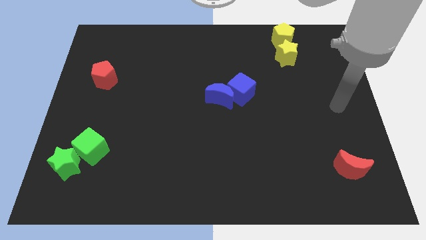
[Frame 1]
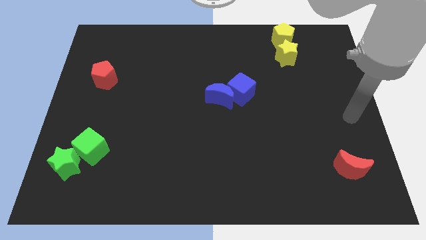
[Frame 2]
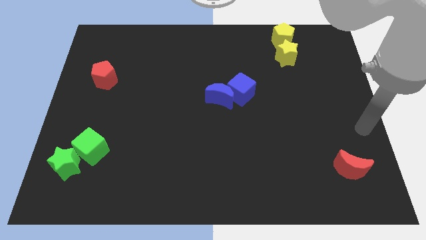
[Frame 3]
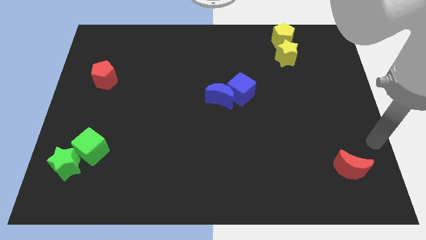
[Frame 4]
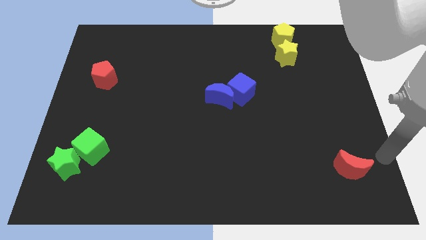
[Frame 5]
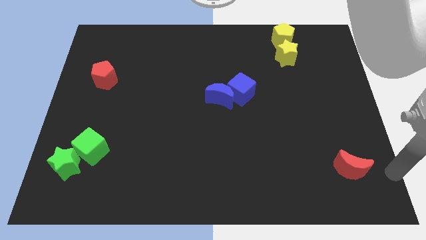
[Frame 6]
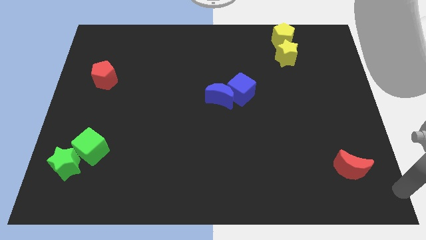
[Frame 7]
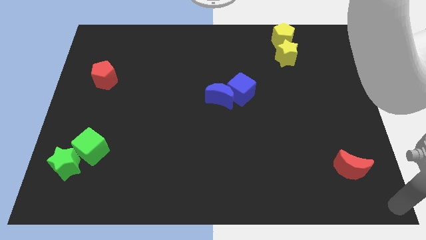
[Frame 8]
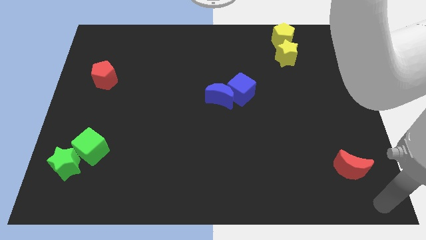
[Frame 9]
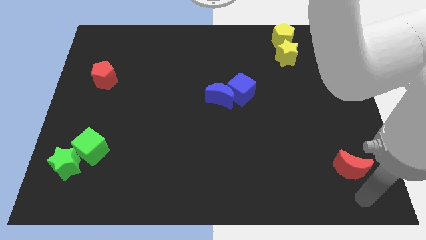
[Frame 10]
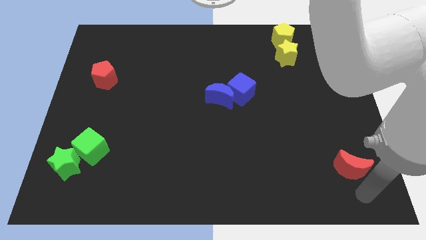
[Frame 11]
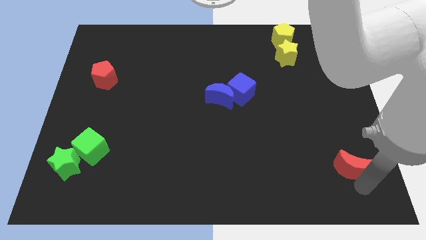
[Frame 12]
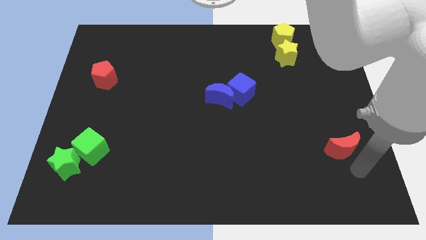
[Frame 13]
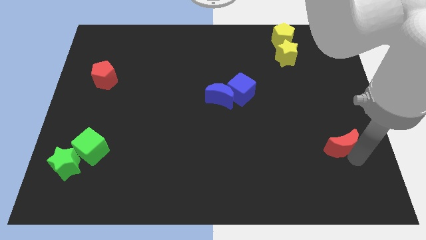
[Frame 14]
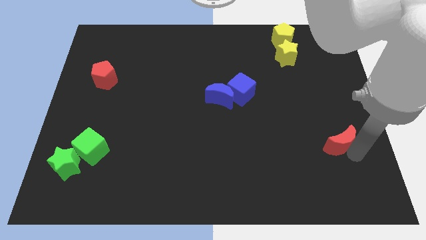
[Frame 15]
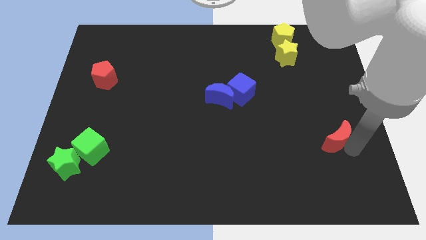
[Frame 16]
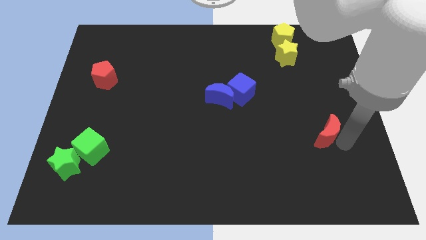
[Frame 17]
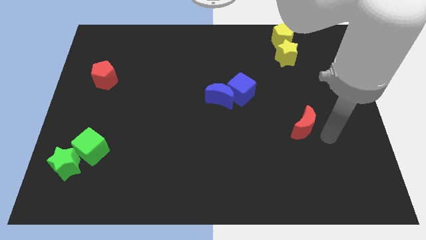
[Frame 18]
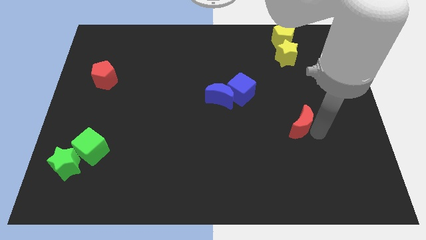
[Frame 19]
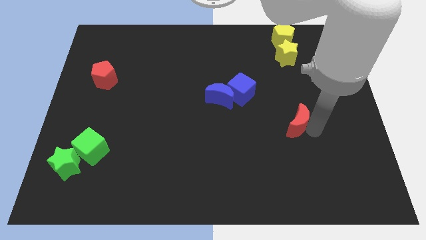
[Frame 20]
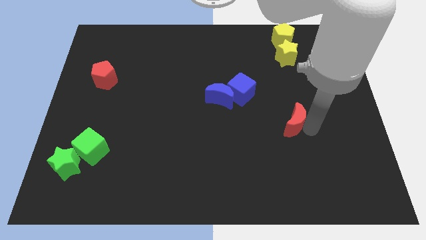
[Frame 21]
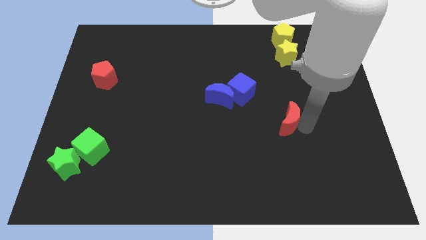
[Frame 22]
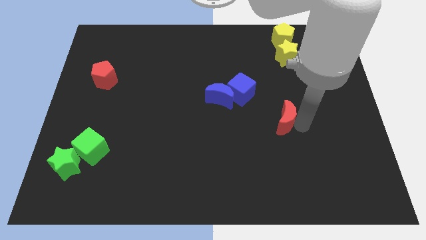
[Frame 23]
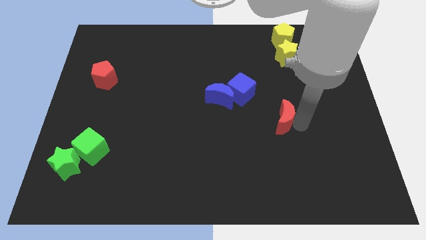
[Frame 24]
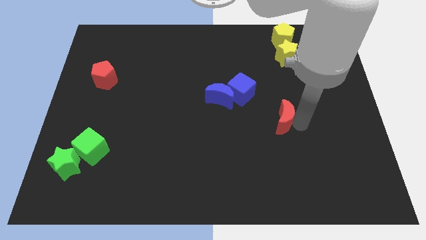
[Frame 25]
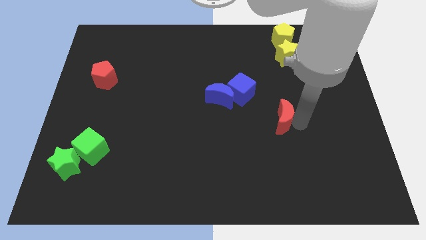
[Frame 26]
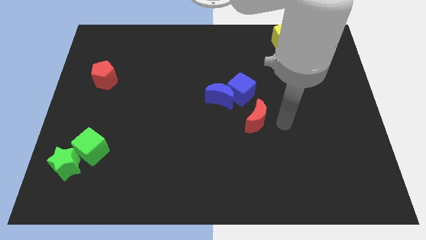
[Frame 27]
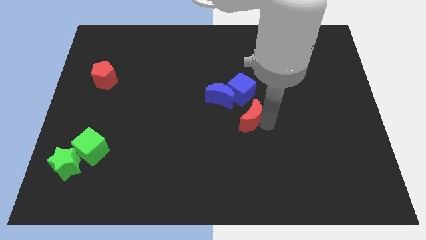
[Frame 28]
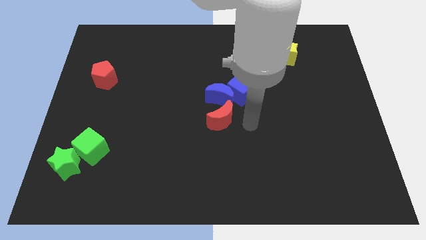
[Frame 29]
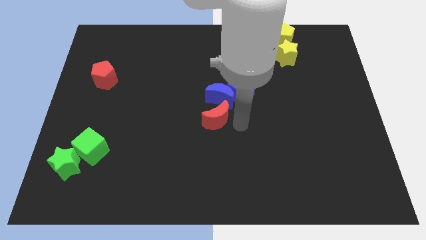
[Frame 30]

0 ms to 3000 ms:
move the red moon to the center

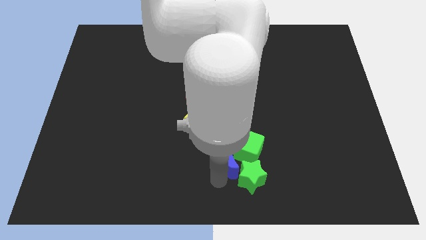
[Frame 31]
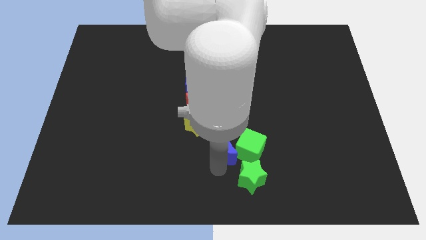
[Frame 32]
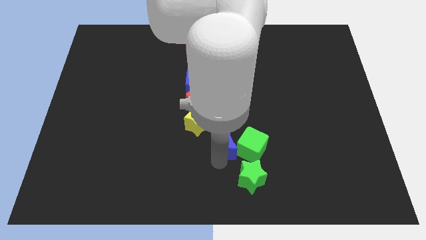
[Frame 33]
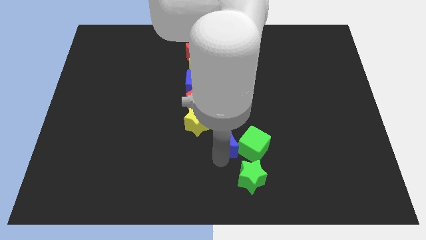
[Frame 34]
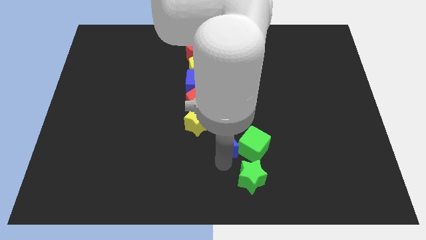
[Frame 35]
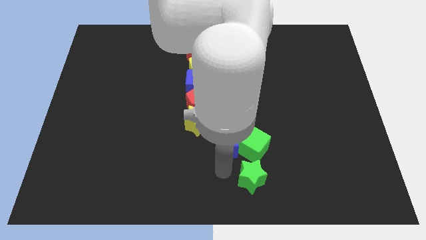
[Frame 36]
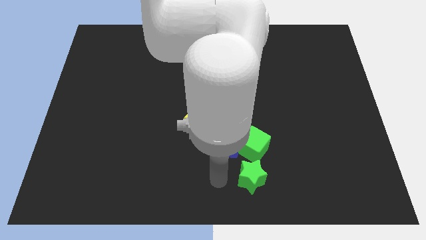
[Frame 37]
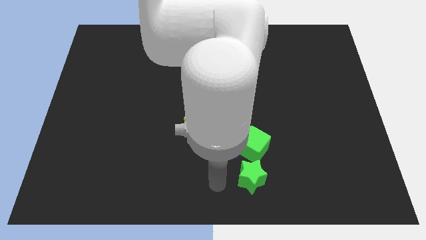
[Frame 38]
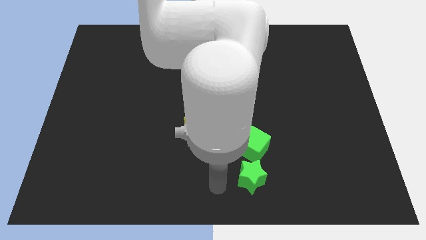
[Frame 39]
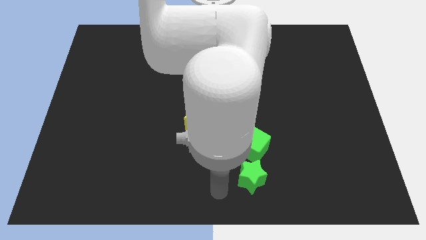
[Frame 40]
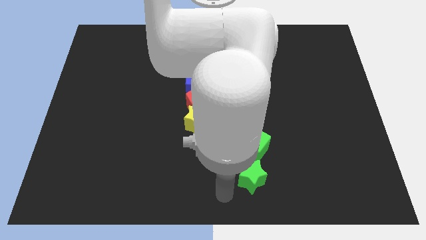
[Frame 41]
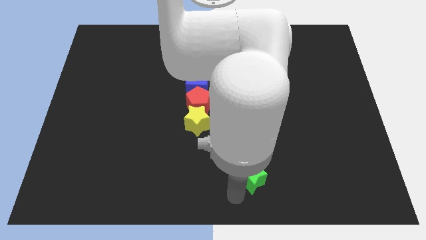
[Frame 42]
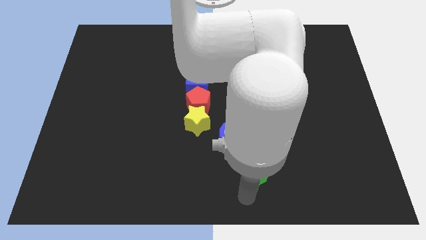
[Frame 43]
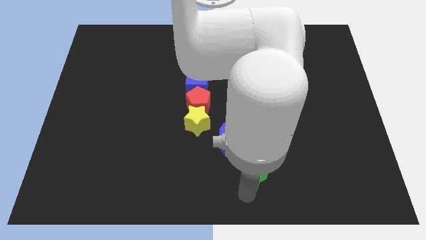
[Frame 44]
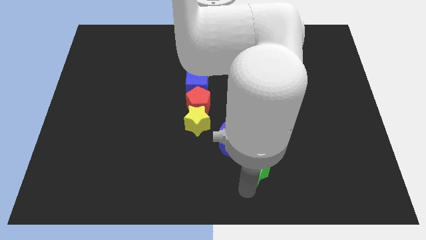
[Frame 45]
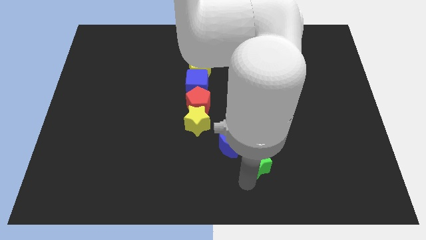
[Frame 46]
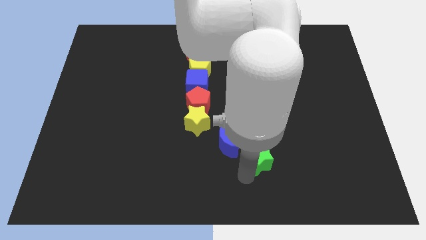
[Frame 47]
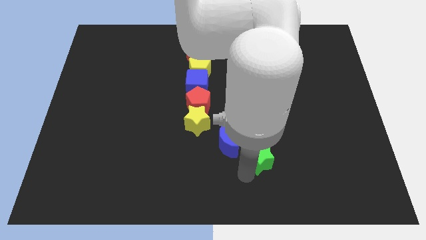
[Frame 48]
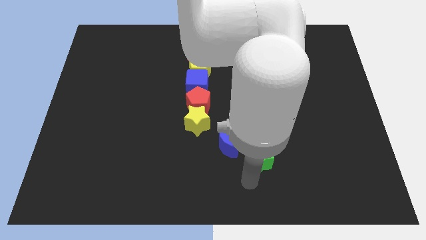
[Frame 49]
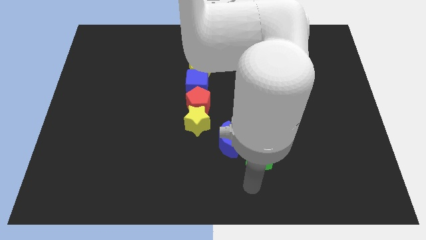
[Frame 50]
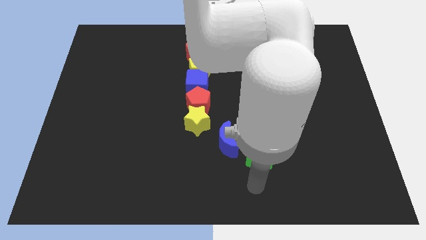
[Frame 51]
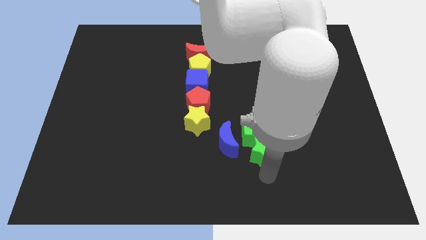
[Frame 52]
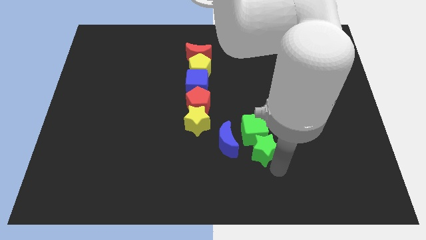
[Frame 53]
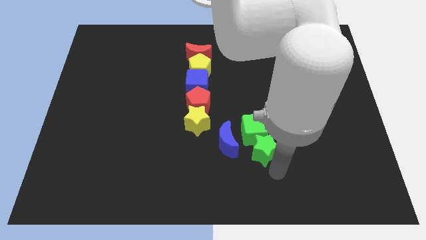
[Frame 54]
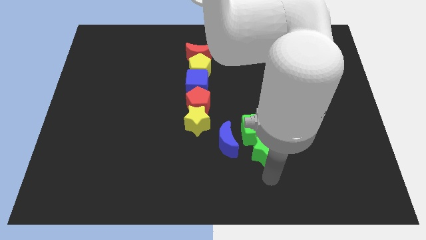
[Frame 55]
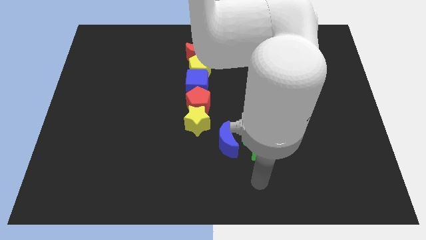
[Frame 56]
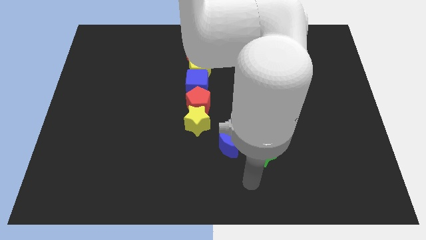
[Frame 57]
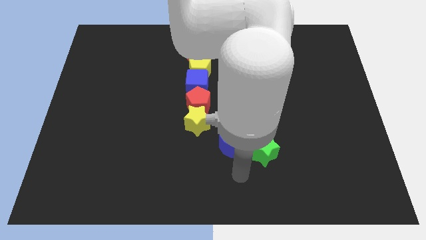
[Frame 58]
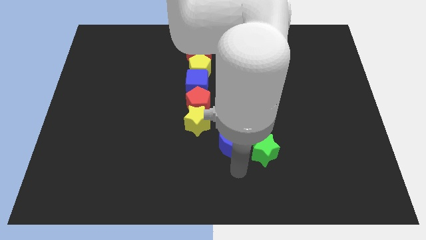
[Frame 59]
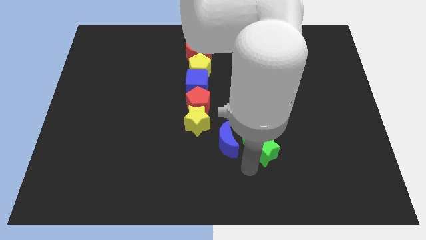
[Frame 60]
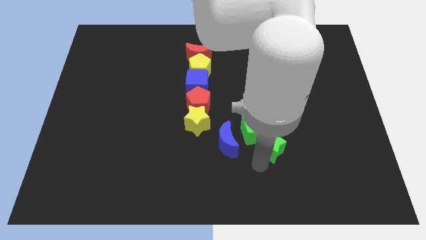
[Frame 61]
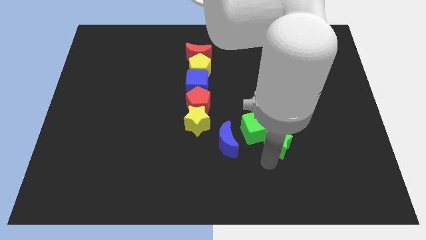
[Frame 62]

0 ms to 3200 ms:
move the green blocks and blue moon upwards

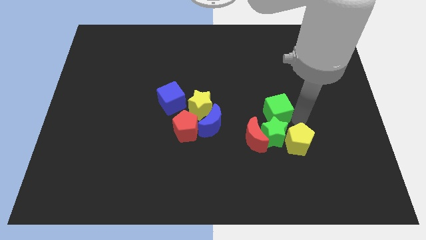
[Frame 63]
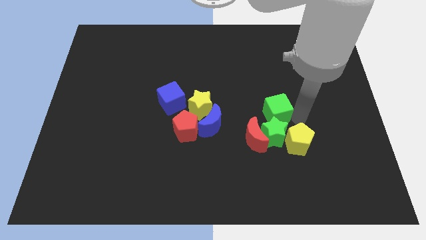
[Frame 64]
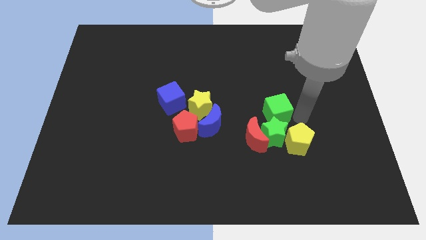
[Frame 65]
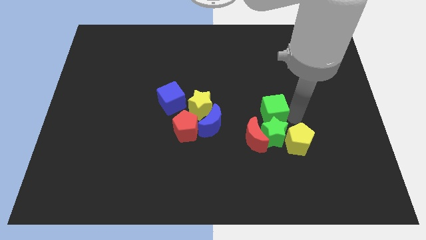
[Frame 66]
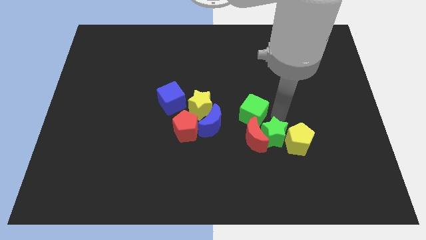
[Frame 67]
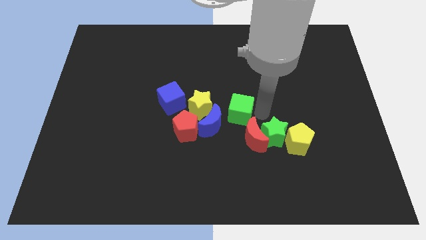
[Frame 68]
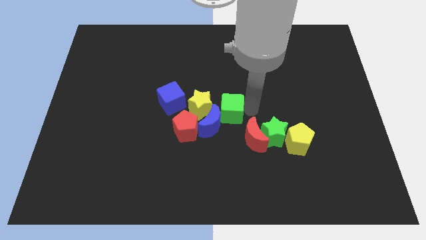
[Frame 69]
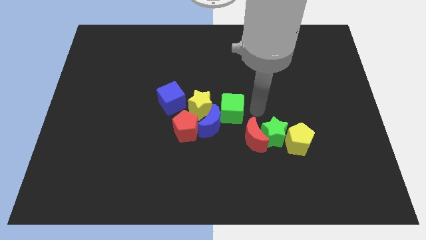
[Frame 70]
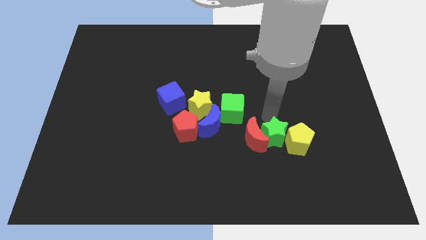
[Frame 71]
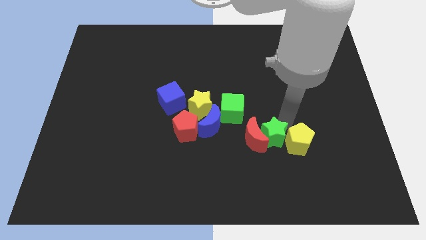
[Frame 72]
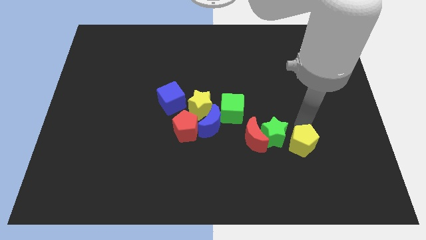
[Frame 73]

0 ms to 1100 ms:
separate green cube from green star

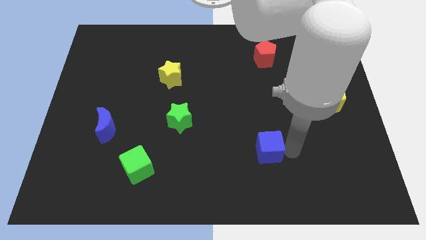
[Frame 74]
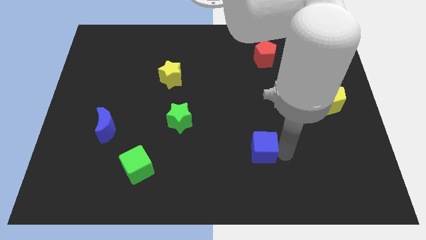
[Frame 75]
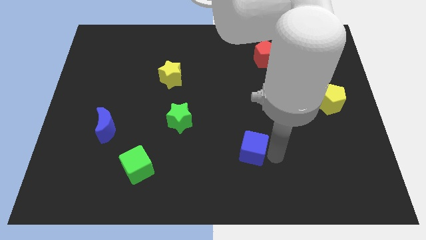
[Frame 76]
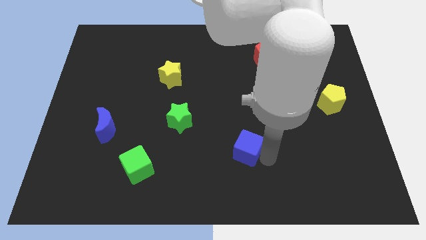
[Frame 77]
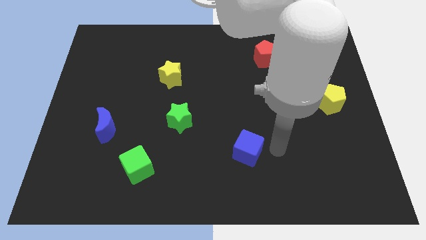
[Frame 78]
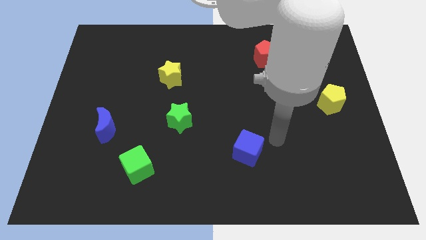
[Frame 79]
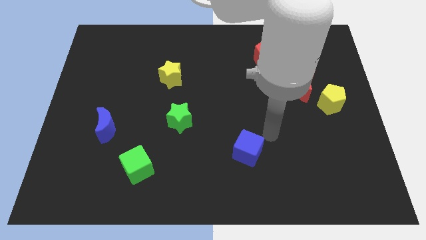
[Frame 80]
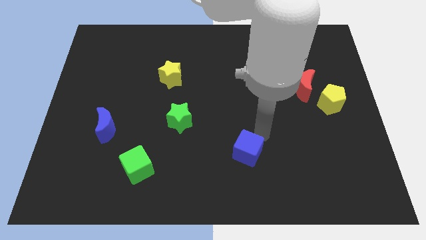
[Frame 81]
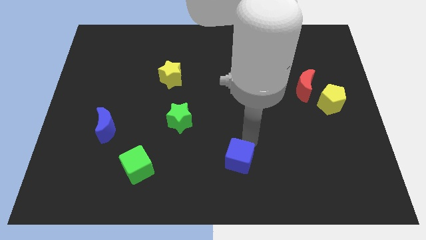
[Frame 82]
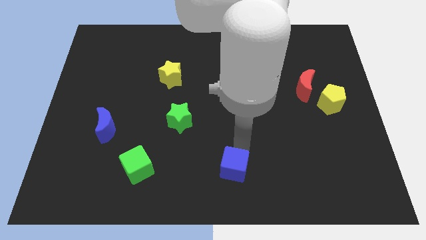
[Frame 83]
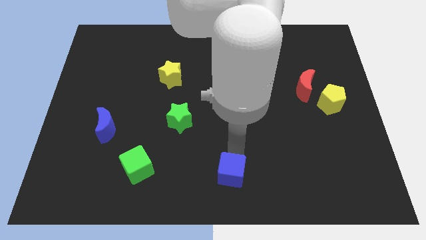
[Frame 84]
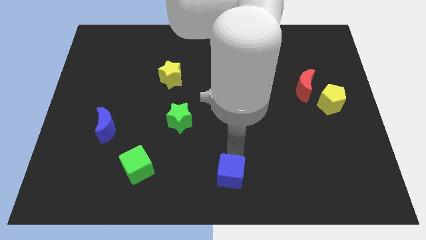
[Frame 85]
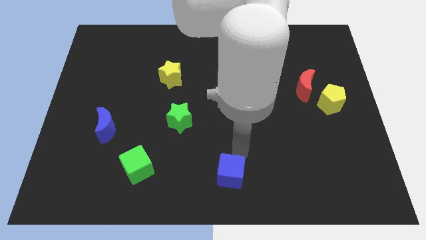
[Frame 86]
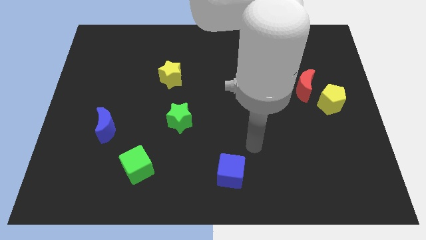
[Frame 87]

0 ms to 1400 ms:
move the blue cube towards the bottom center

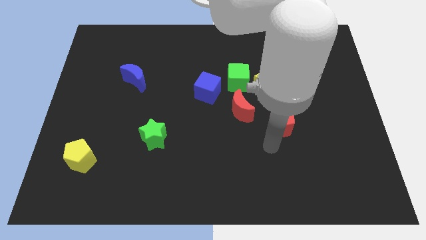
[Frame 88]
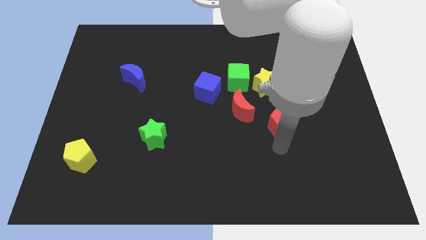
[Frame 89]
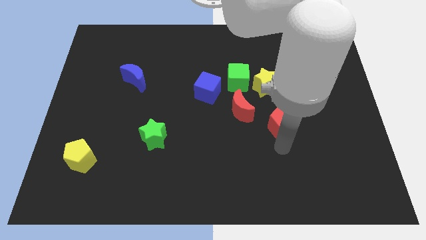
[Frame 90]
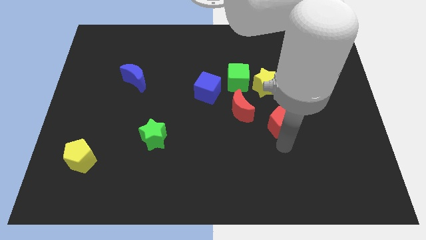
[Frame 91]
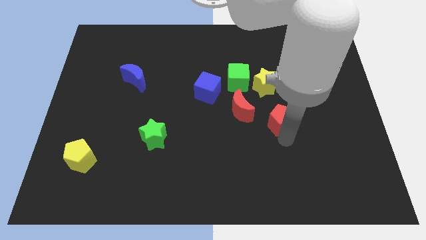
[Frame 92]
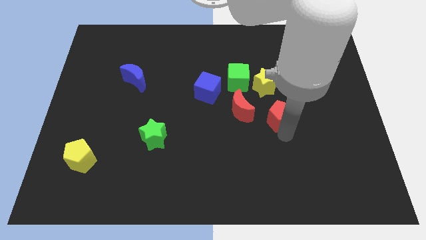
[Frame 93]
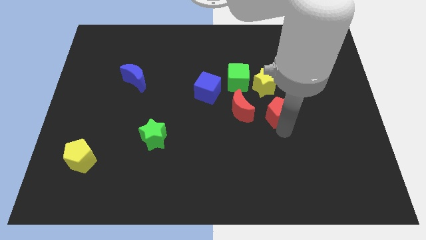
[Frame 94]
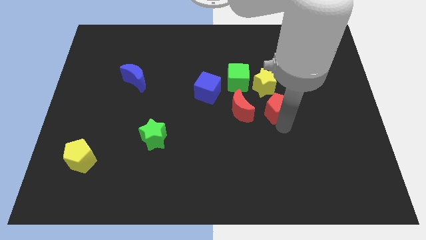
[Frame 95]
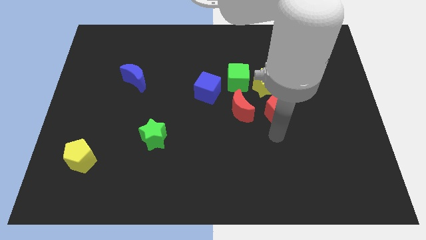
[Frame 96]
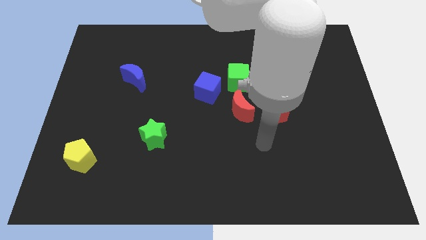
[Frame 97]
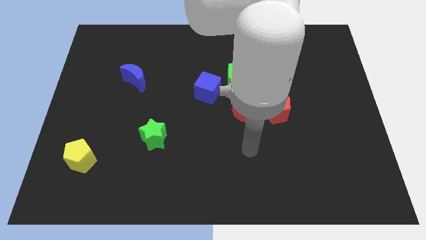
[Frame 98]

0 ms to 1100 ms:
place the red pentagon to the right of the red crescent
